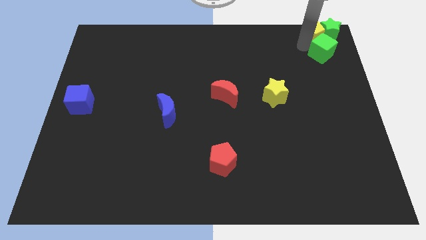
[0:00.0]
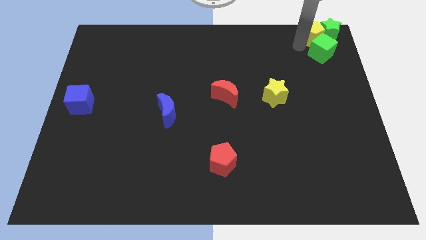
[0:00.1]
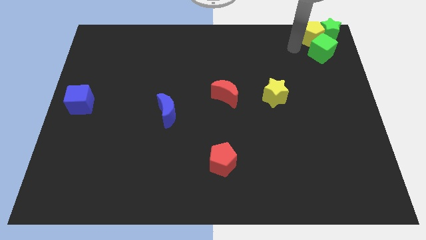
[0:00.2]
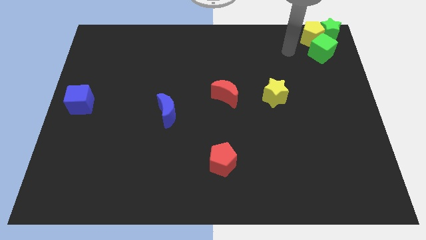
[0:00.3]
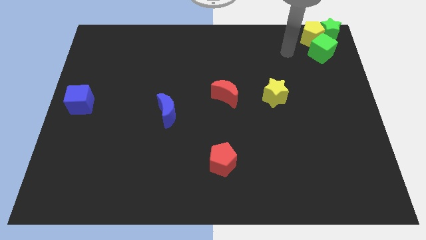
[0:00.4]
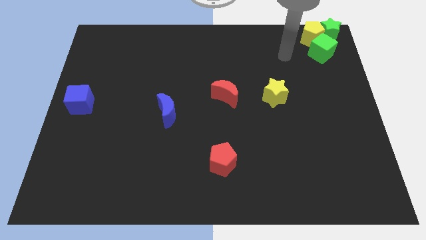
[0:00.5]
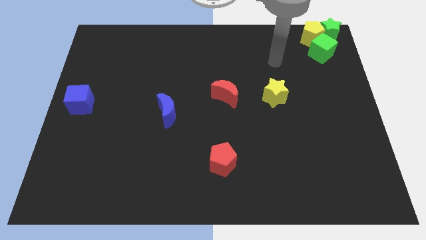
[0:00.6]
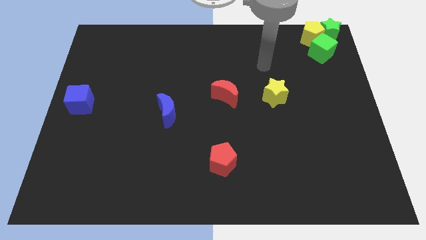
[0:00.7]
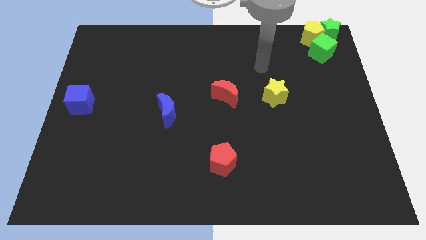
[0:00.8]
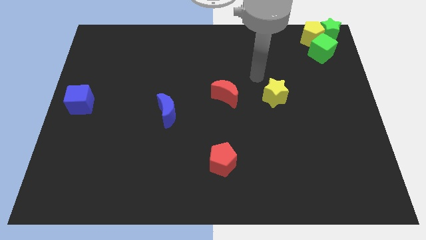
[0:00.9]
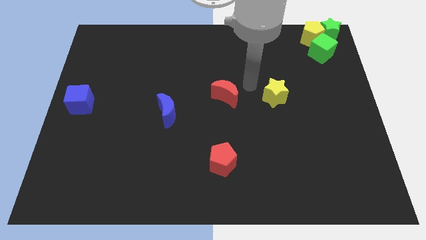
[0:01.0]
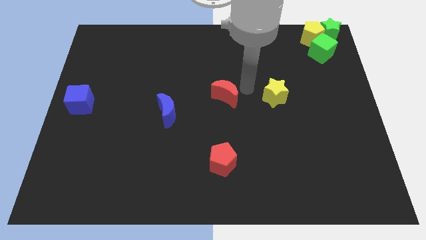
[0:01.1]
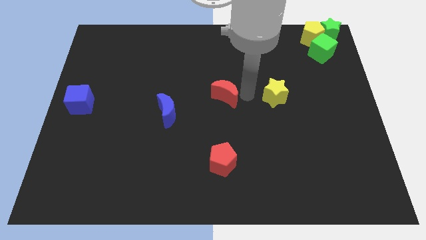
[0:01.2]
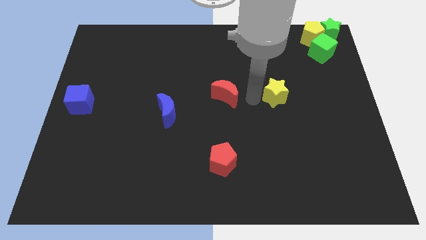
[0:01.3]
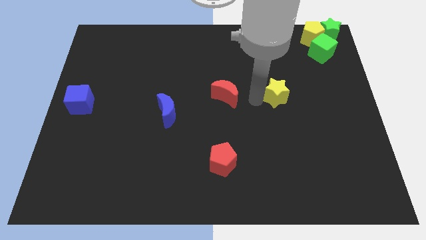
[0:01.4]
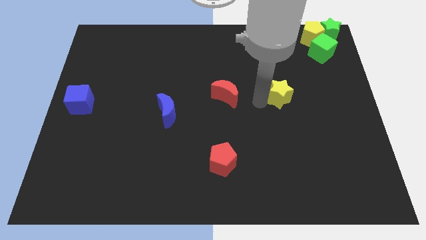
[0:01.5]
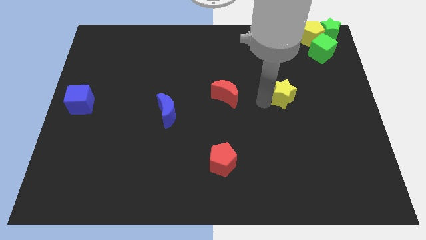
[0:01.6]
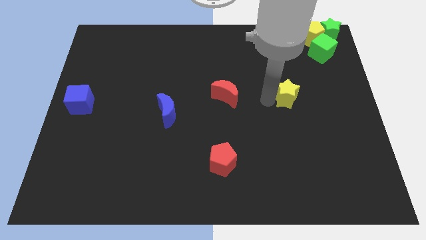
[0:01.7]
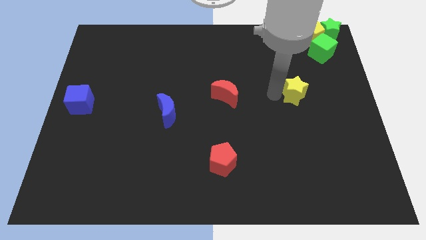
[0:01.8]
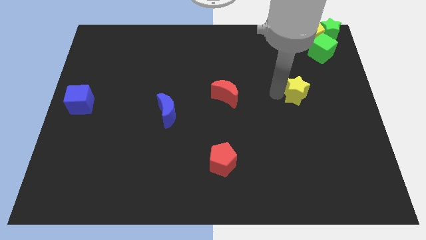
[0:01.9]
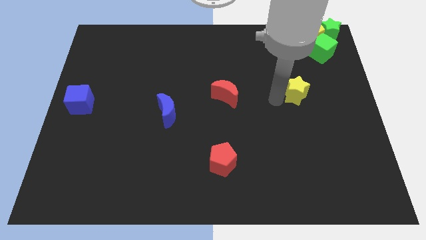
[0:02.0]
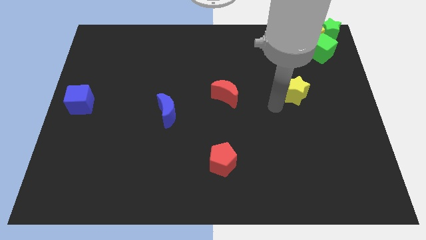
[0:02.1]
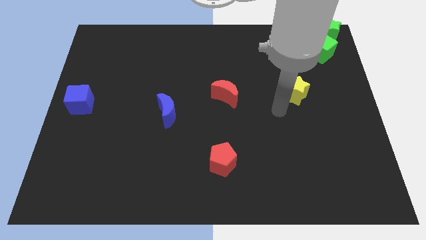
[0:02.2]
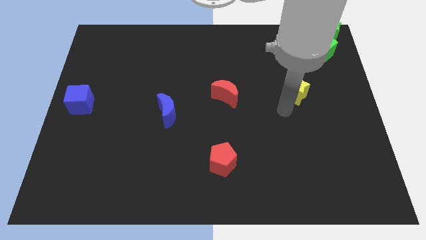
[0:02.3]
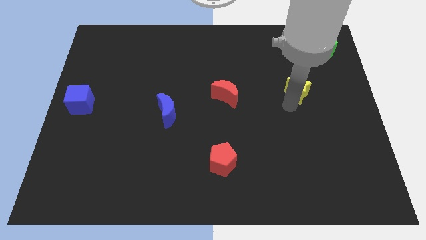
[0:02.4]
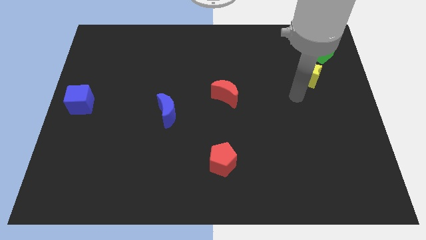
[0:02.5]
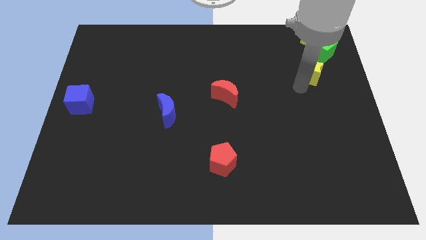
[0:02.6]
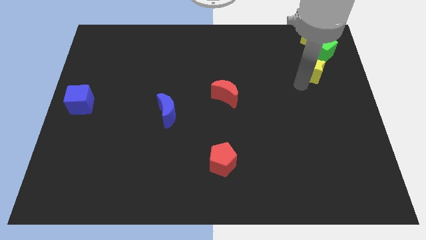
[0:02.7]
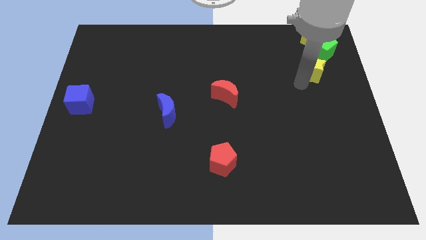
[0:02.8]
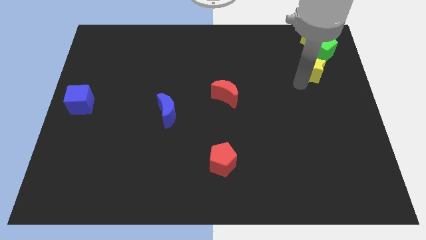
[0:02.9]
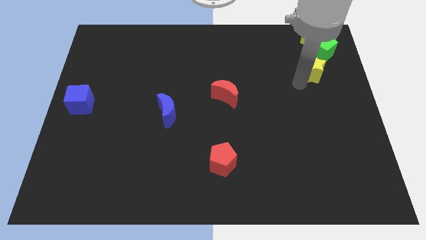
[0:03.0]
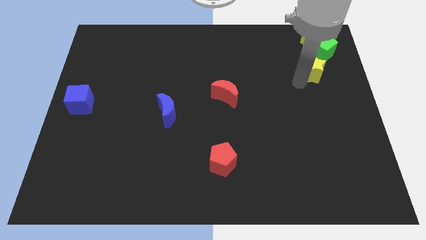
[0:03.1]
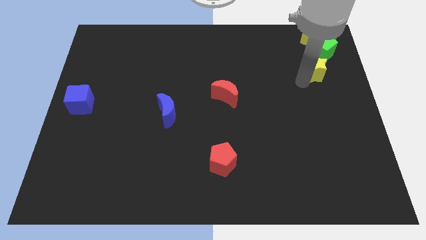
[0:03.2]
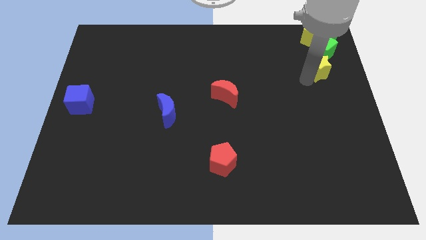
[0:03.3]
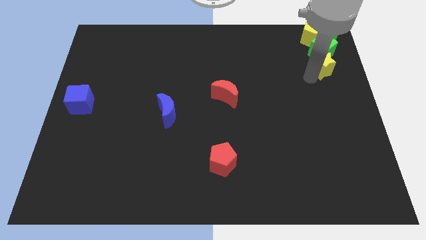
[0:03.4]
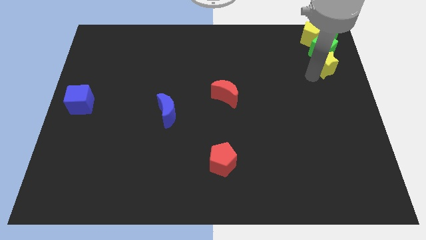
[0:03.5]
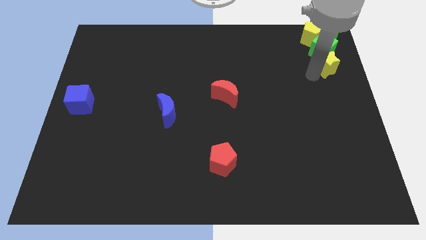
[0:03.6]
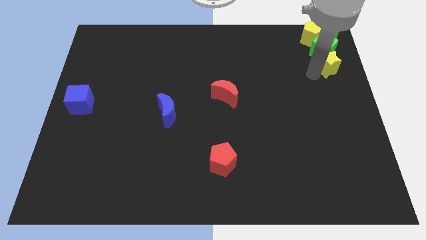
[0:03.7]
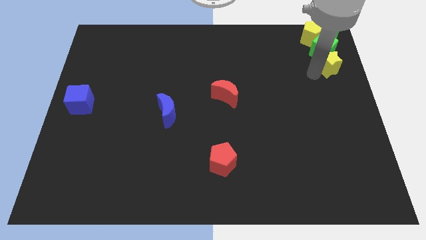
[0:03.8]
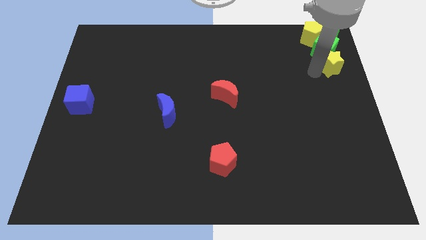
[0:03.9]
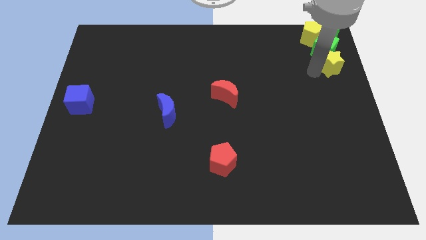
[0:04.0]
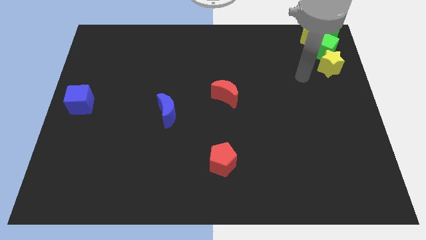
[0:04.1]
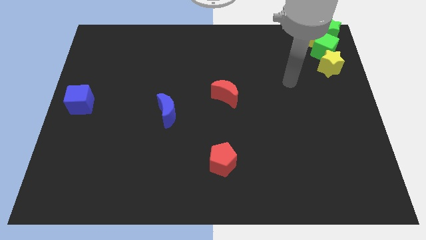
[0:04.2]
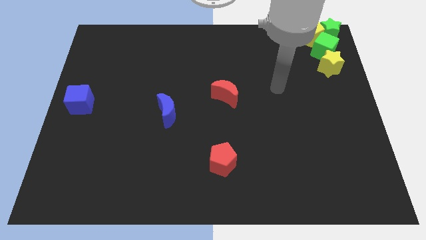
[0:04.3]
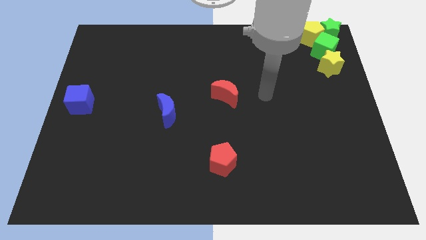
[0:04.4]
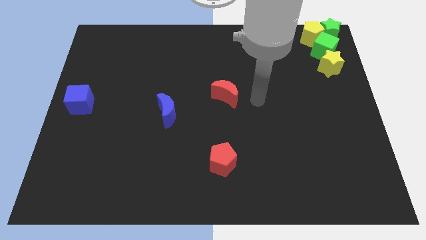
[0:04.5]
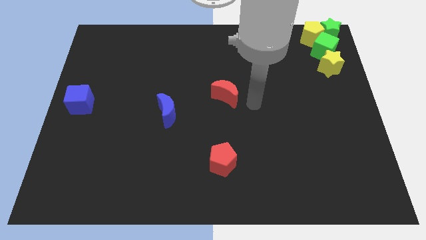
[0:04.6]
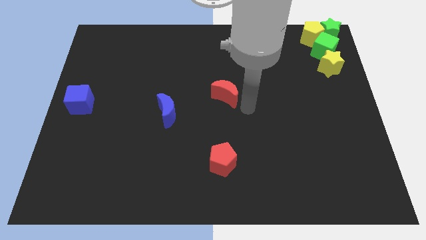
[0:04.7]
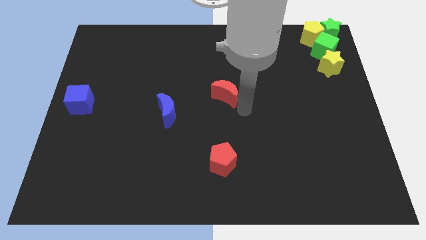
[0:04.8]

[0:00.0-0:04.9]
push the yellow star into the green cube

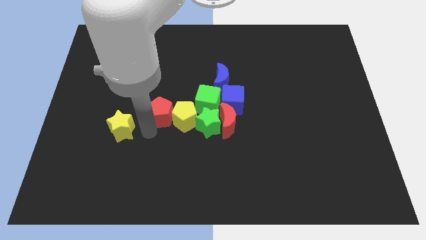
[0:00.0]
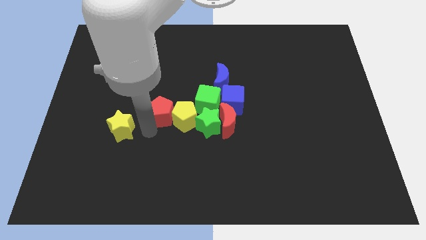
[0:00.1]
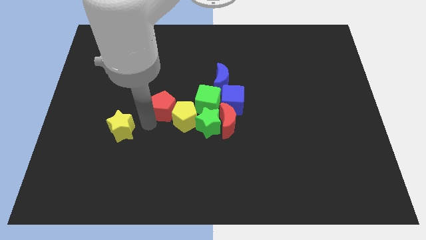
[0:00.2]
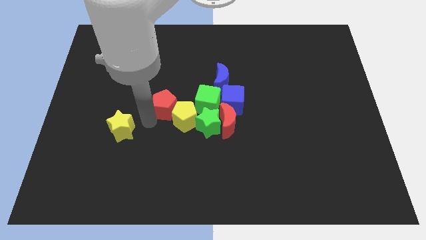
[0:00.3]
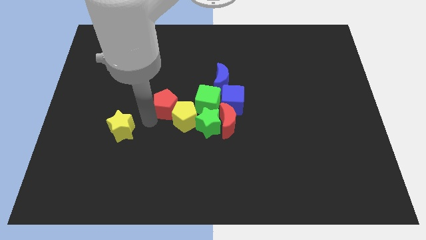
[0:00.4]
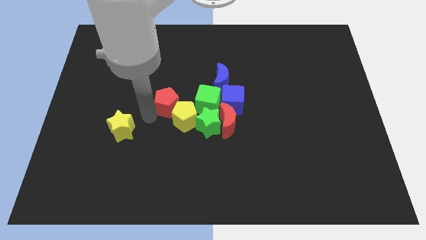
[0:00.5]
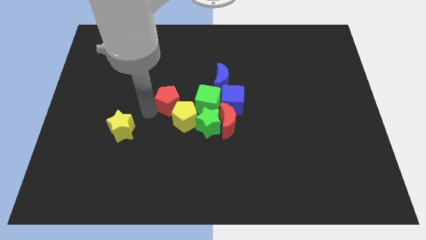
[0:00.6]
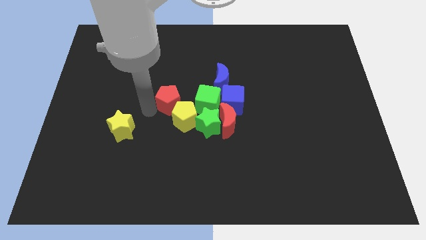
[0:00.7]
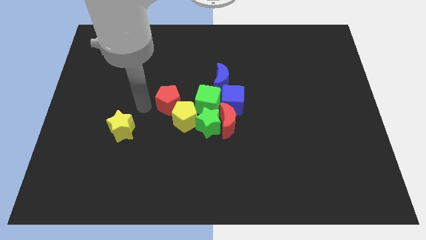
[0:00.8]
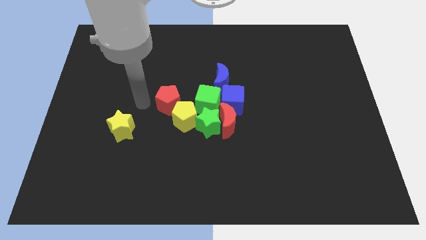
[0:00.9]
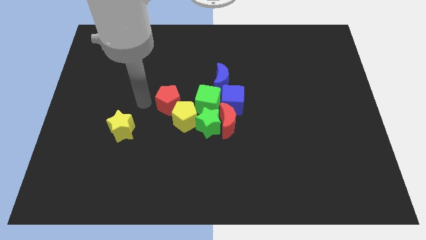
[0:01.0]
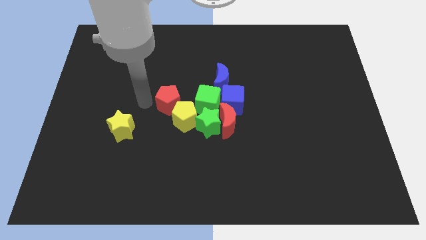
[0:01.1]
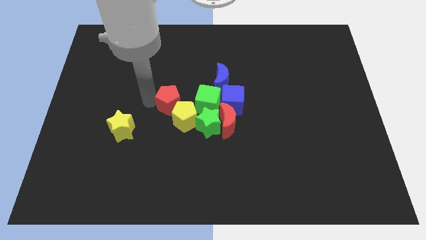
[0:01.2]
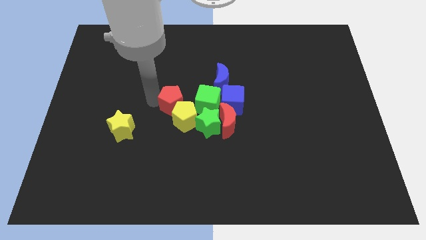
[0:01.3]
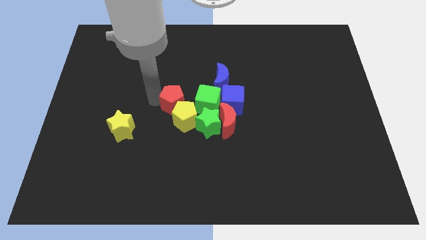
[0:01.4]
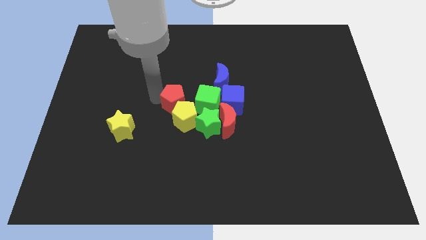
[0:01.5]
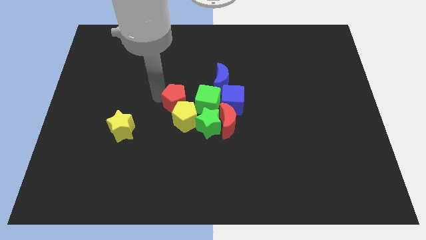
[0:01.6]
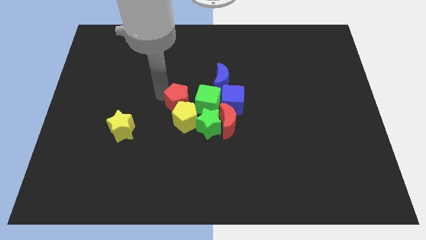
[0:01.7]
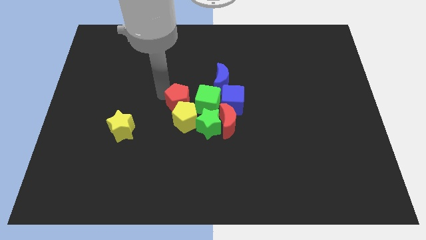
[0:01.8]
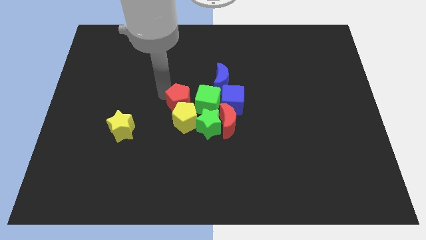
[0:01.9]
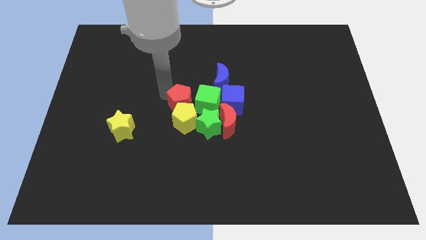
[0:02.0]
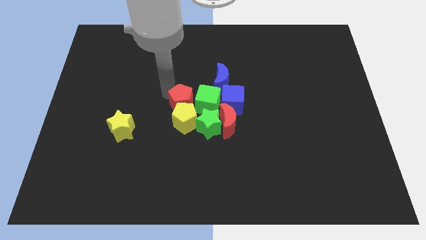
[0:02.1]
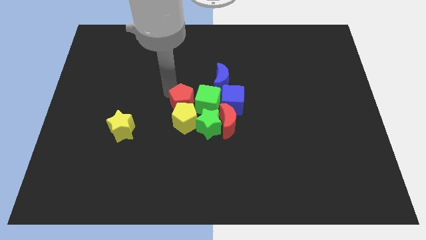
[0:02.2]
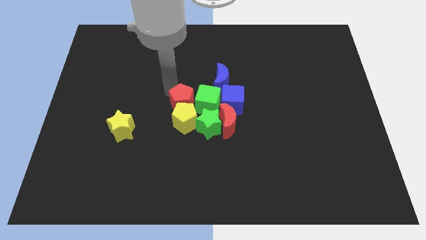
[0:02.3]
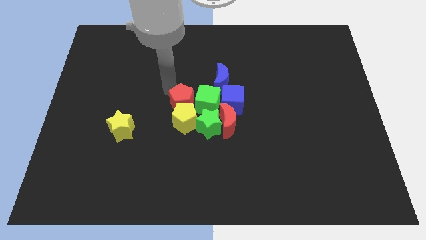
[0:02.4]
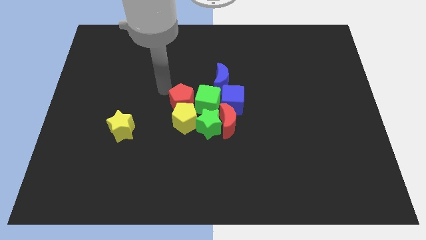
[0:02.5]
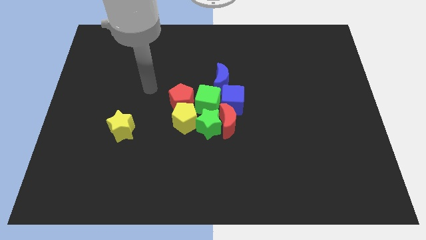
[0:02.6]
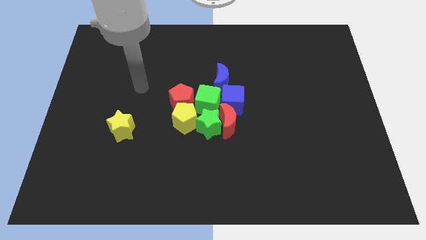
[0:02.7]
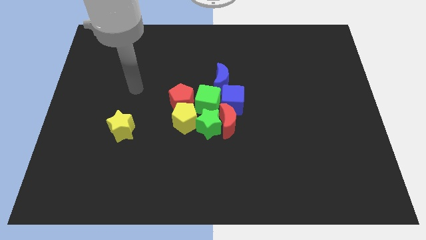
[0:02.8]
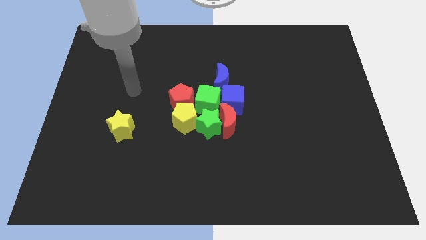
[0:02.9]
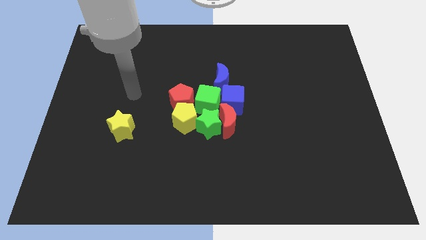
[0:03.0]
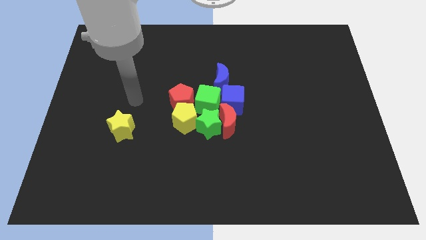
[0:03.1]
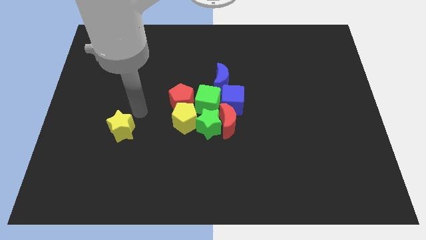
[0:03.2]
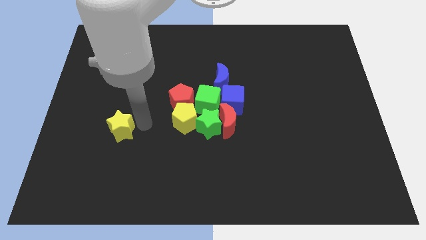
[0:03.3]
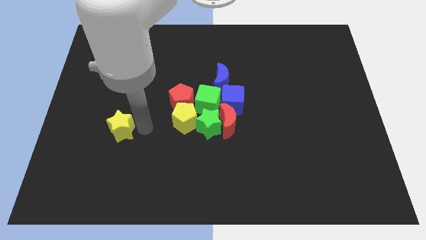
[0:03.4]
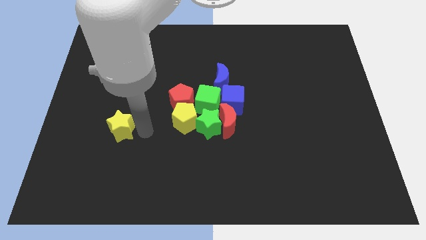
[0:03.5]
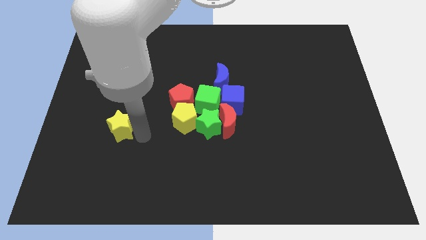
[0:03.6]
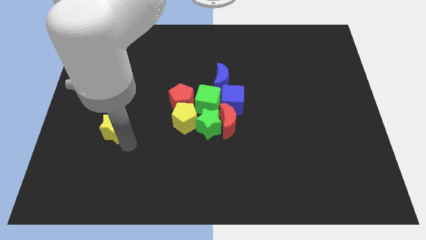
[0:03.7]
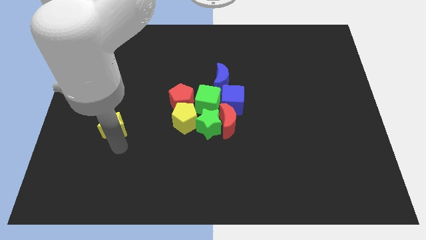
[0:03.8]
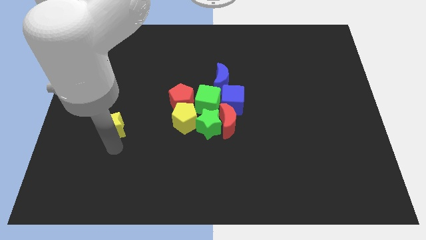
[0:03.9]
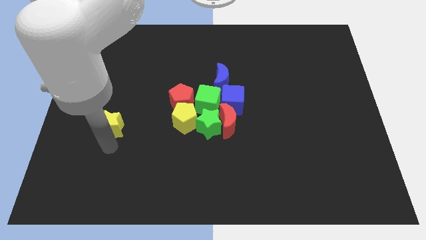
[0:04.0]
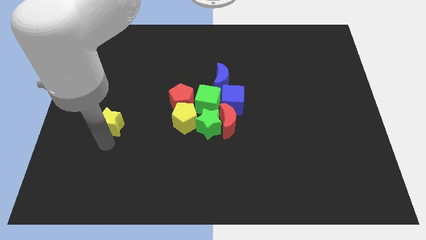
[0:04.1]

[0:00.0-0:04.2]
move the red pentagon above the yellow pentagon
